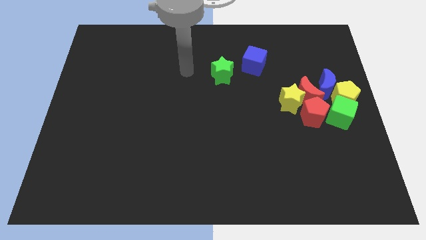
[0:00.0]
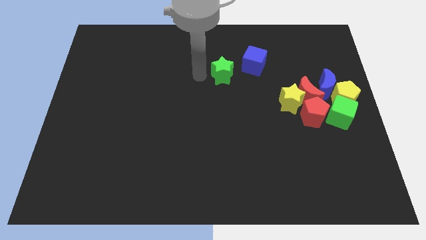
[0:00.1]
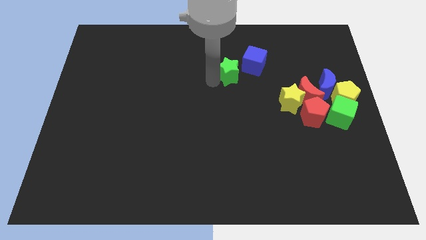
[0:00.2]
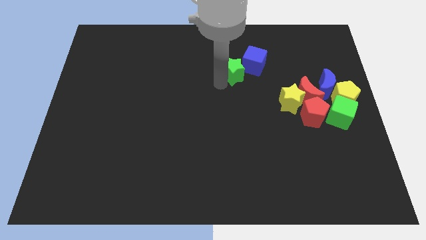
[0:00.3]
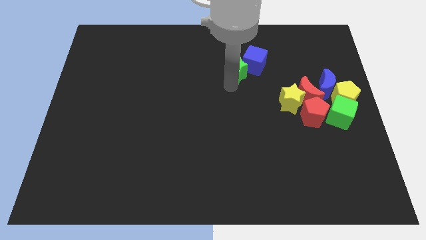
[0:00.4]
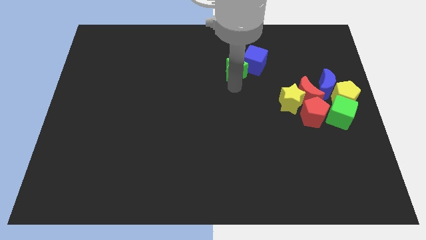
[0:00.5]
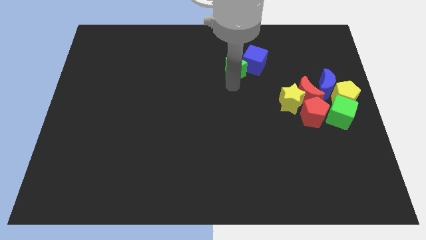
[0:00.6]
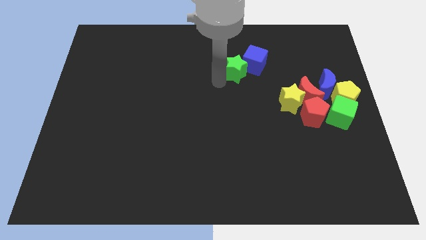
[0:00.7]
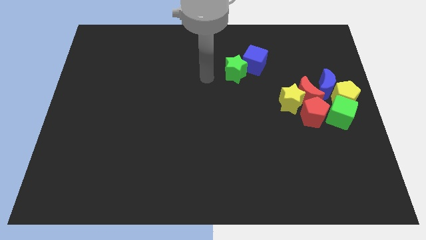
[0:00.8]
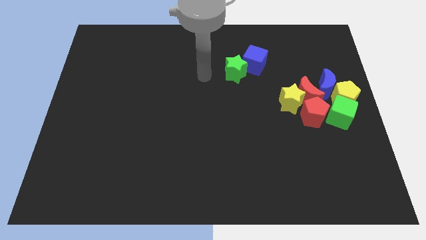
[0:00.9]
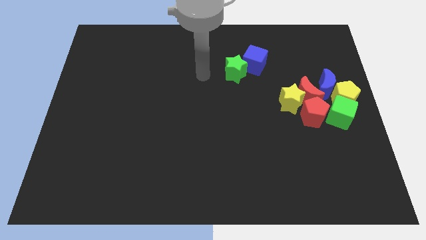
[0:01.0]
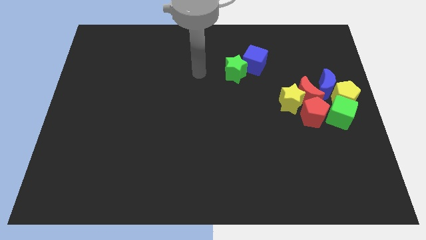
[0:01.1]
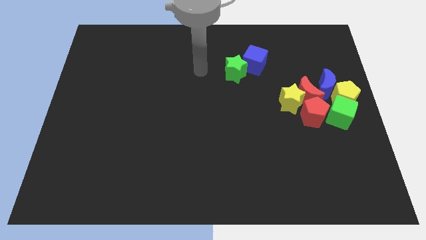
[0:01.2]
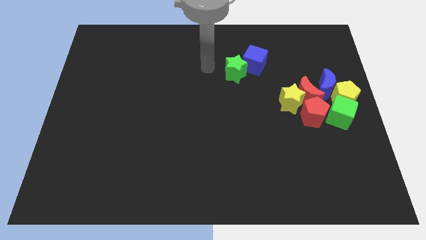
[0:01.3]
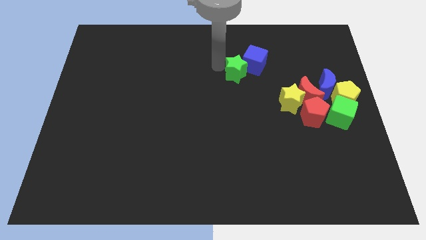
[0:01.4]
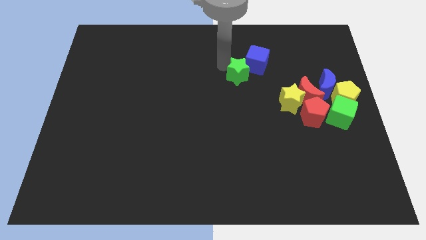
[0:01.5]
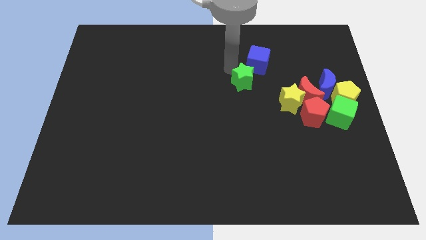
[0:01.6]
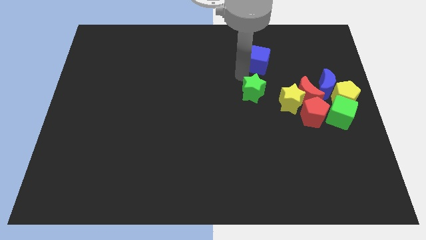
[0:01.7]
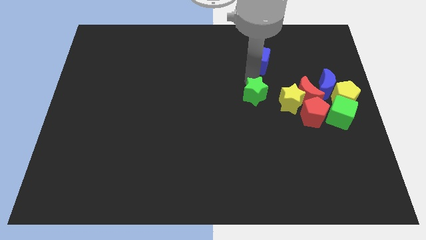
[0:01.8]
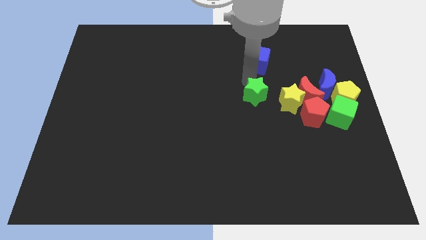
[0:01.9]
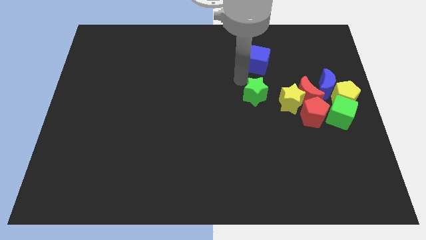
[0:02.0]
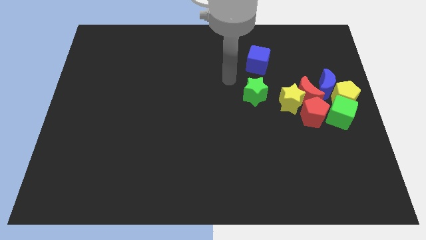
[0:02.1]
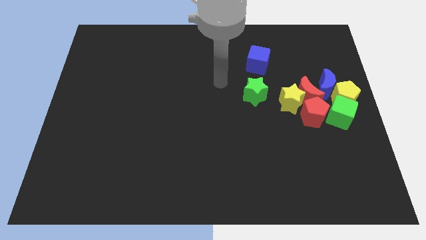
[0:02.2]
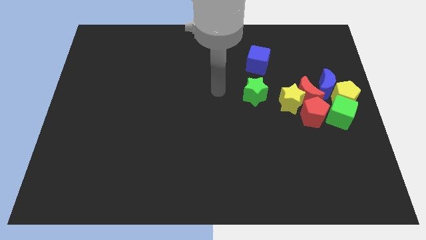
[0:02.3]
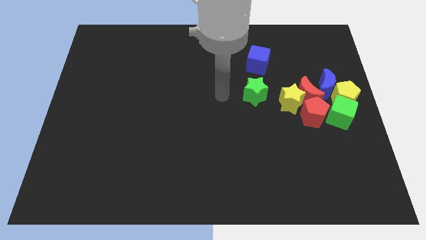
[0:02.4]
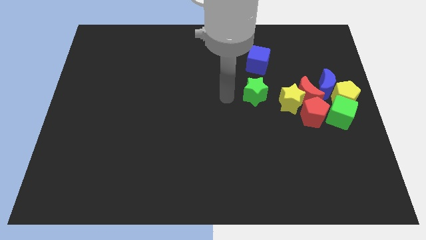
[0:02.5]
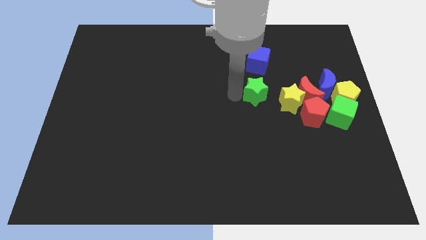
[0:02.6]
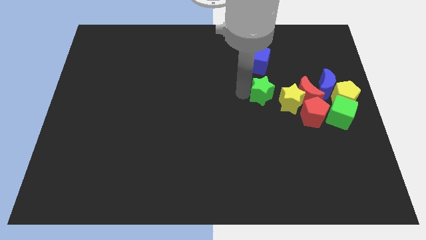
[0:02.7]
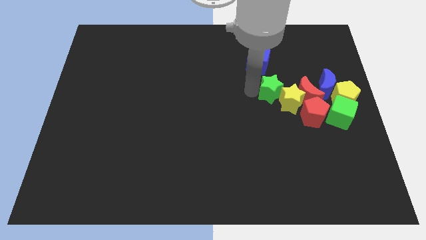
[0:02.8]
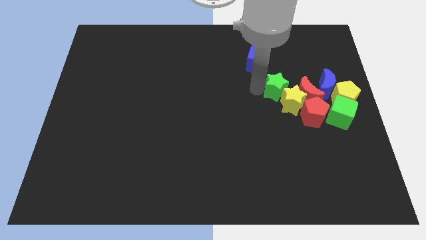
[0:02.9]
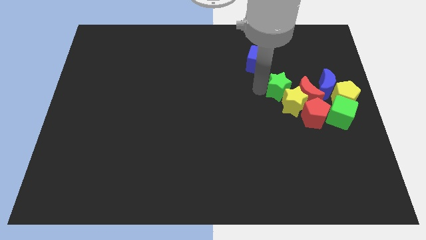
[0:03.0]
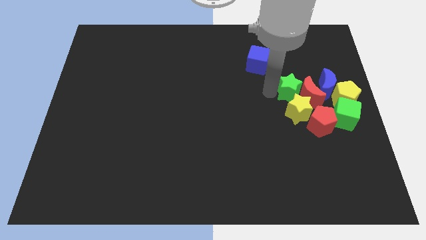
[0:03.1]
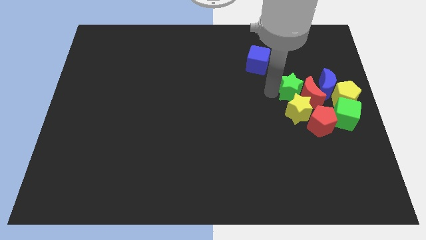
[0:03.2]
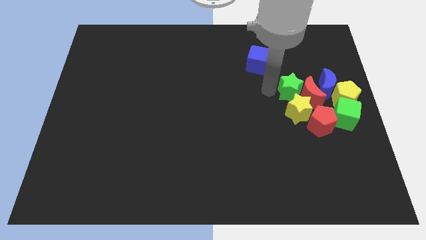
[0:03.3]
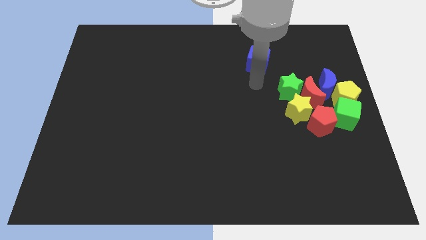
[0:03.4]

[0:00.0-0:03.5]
move the green star to the top of the yellow star

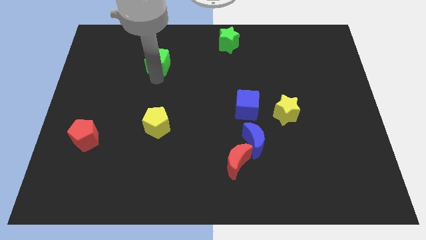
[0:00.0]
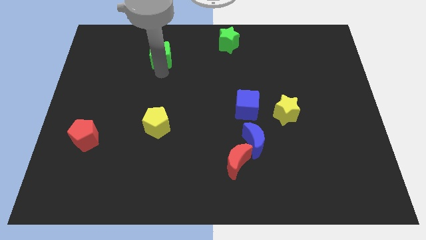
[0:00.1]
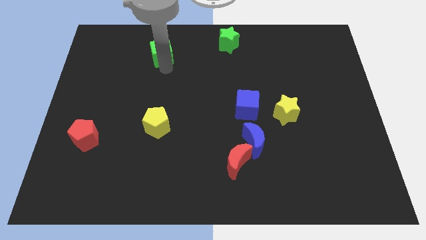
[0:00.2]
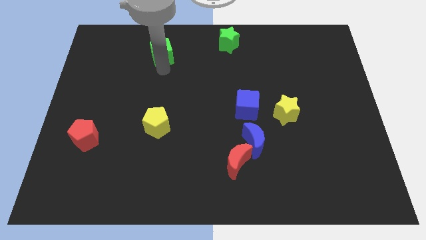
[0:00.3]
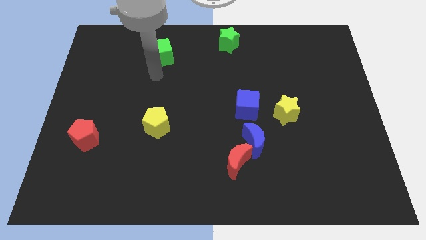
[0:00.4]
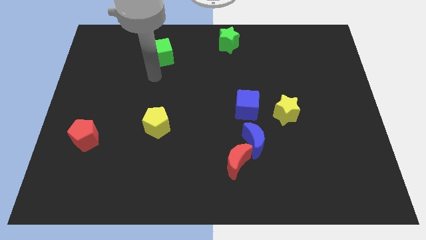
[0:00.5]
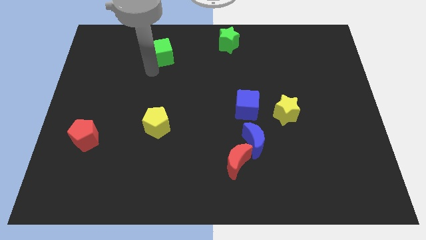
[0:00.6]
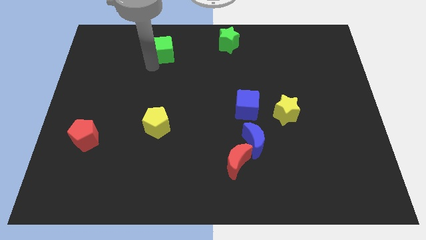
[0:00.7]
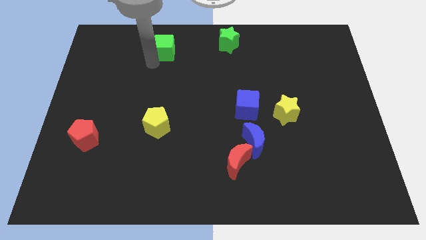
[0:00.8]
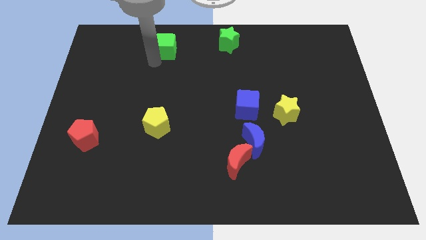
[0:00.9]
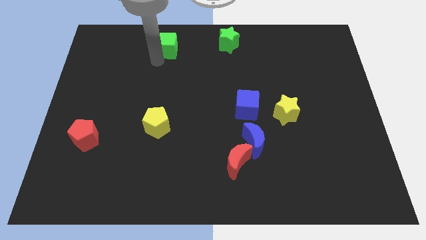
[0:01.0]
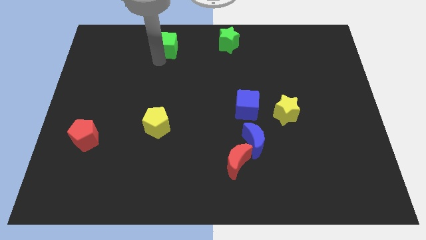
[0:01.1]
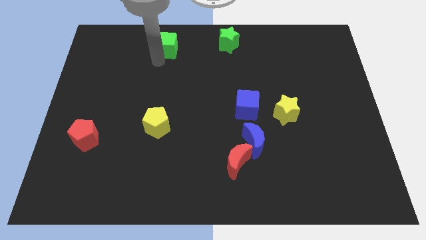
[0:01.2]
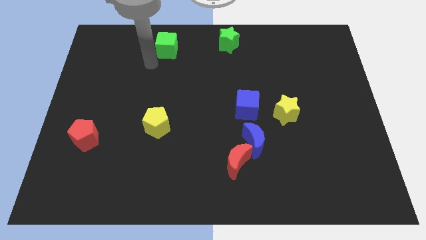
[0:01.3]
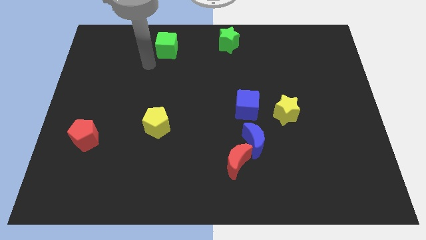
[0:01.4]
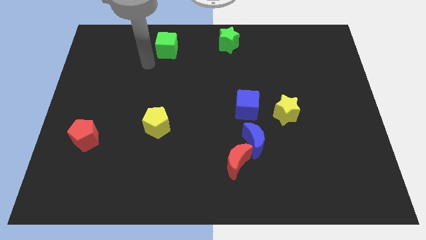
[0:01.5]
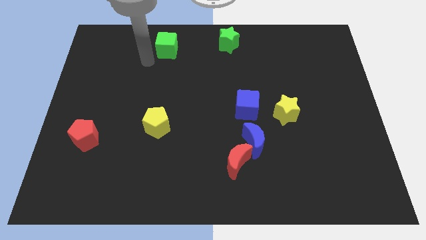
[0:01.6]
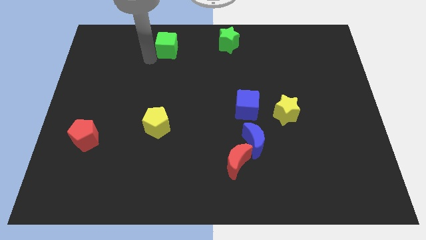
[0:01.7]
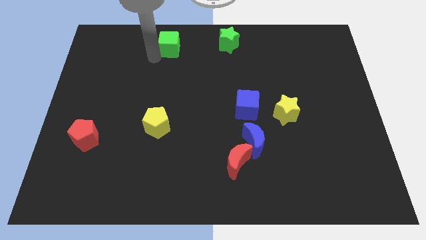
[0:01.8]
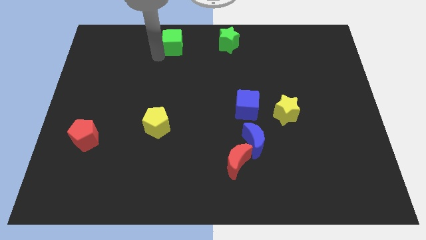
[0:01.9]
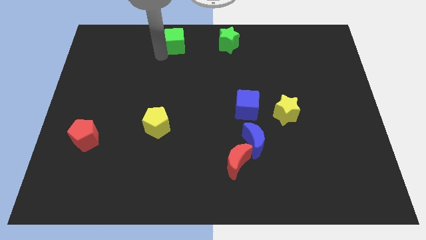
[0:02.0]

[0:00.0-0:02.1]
move green cube to the left of green star

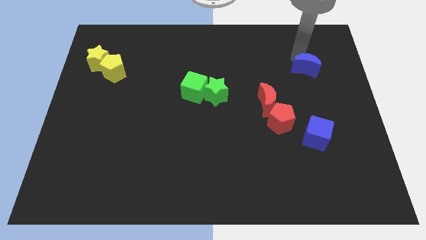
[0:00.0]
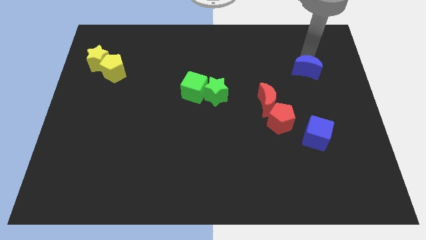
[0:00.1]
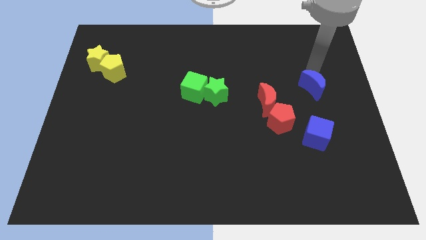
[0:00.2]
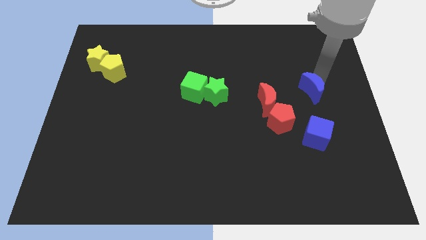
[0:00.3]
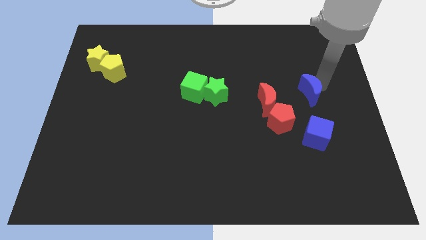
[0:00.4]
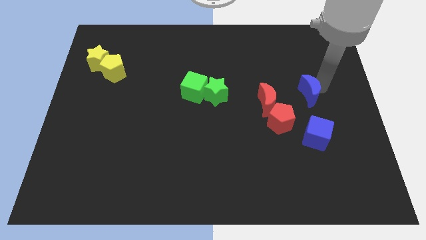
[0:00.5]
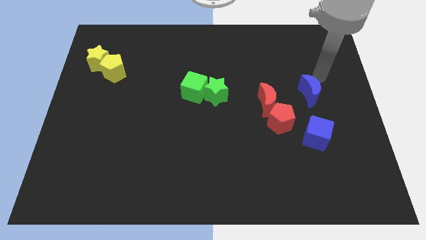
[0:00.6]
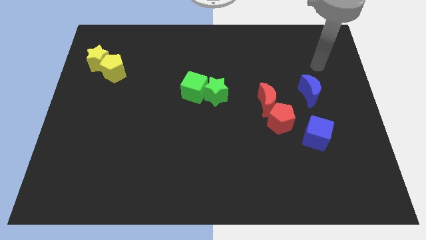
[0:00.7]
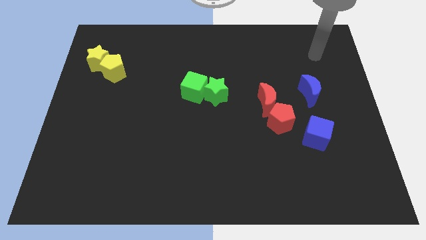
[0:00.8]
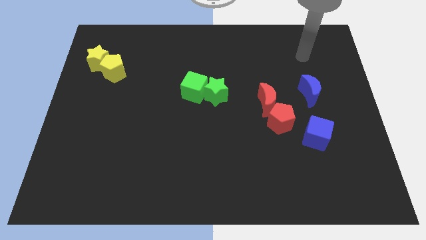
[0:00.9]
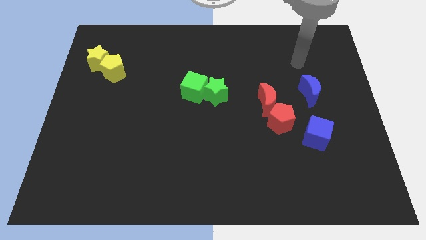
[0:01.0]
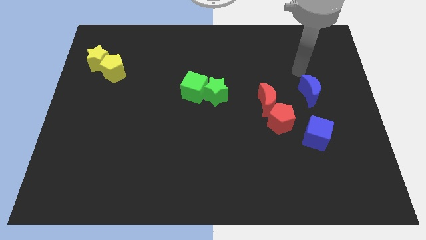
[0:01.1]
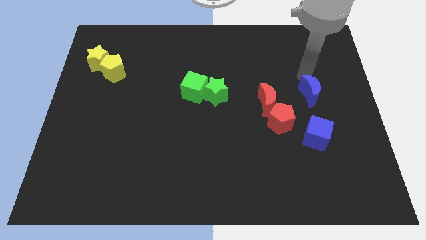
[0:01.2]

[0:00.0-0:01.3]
place the blue moon above the blue cube

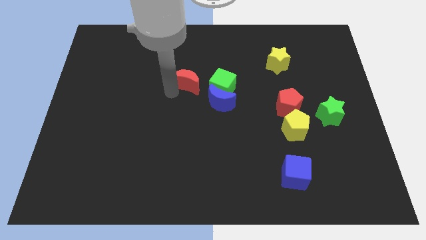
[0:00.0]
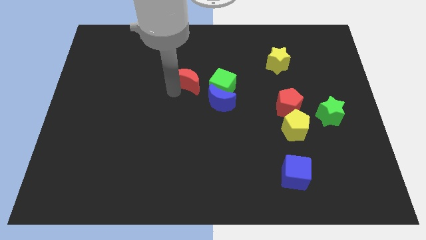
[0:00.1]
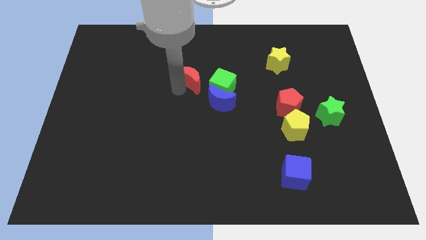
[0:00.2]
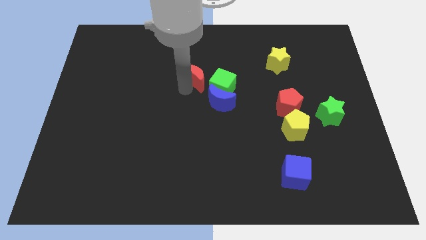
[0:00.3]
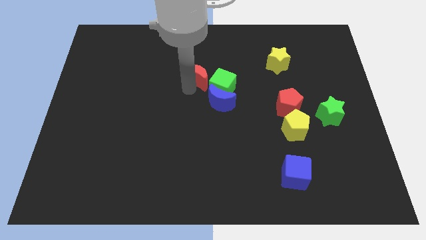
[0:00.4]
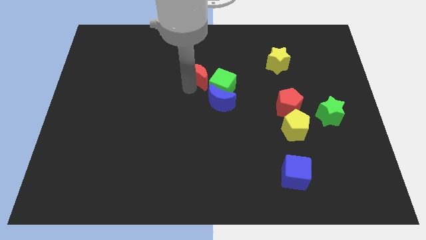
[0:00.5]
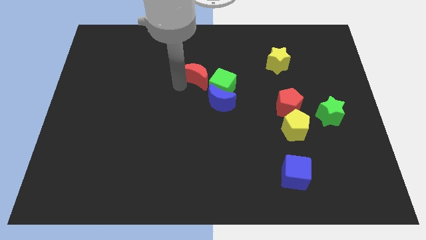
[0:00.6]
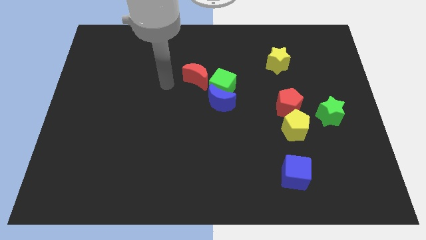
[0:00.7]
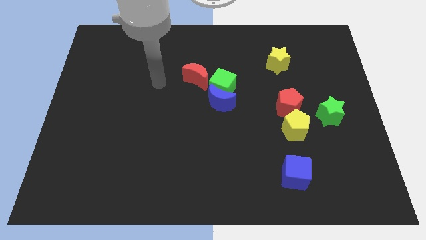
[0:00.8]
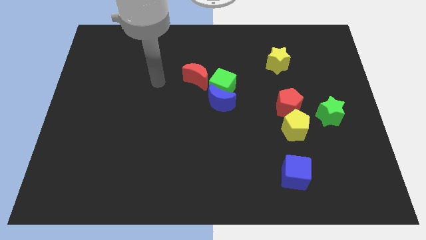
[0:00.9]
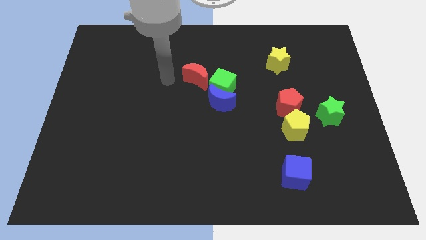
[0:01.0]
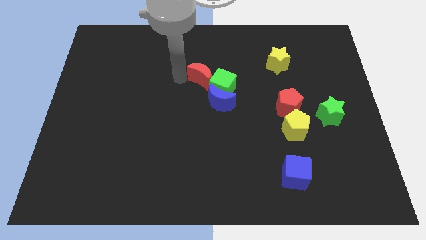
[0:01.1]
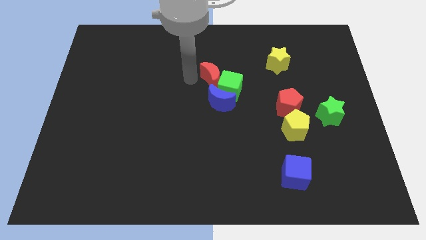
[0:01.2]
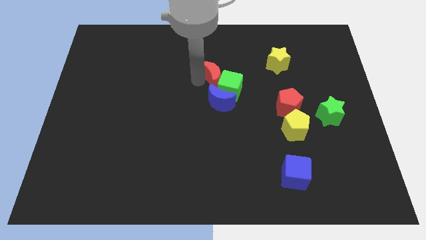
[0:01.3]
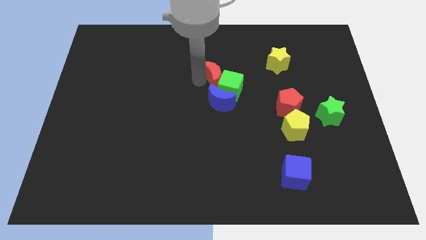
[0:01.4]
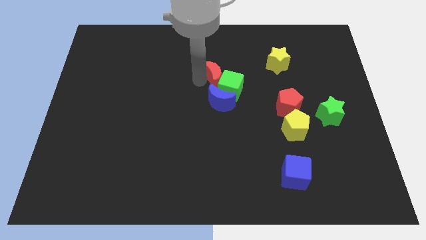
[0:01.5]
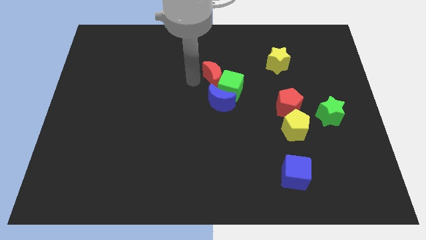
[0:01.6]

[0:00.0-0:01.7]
push the red moon into the green cube

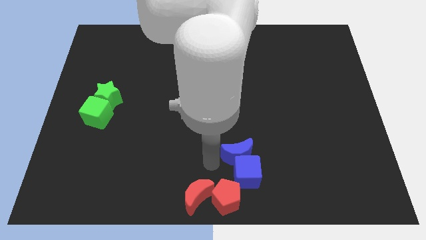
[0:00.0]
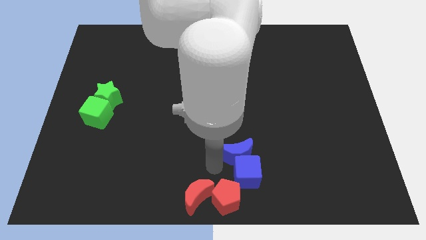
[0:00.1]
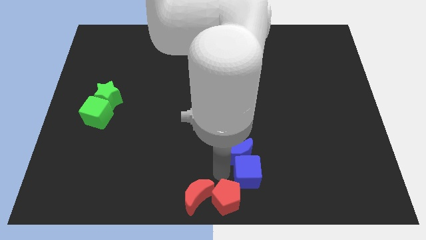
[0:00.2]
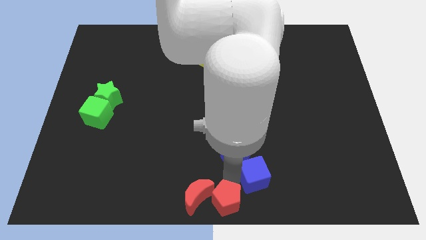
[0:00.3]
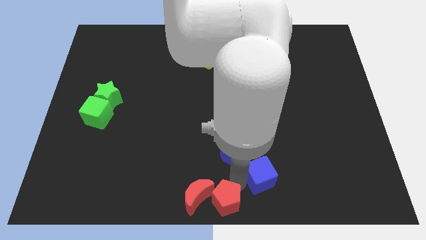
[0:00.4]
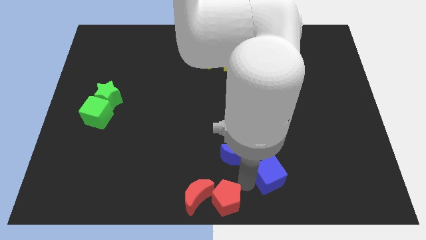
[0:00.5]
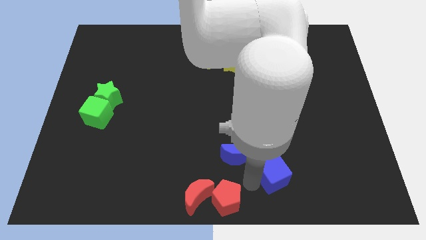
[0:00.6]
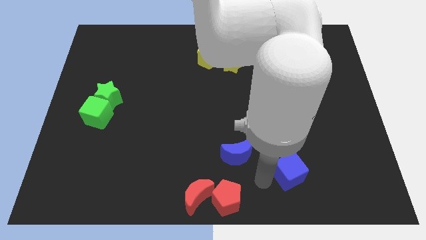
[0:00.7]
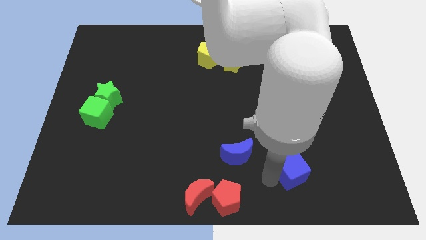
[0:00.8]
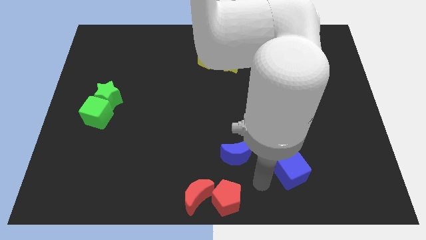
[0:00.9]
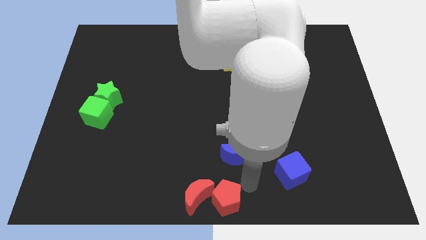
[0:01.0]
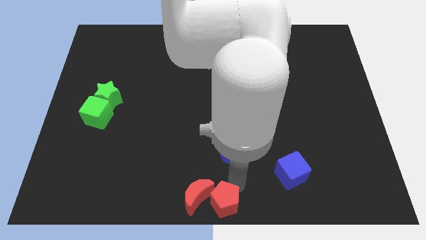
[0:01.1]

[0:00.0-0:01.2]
push the blue cube to the right side slightly
